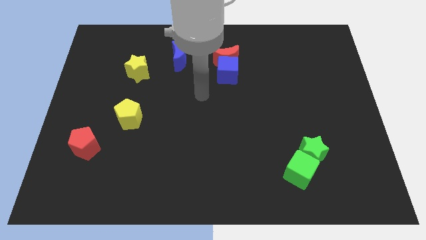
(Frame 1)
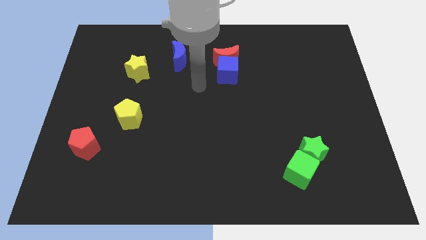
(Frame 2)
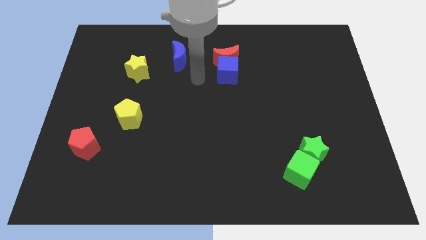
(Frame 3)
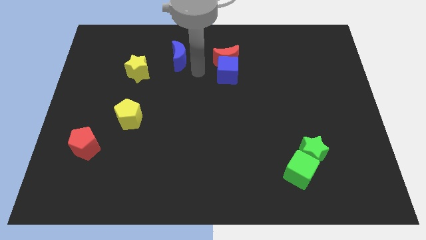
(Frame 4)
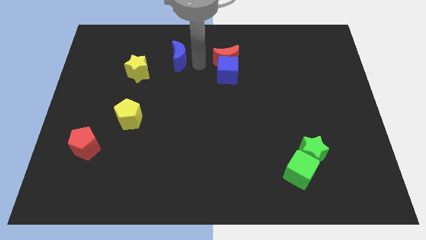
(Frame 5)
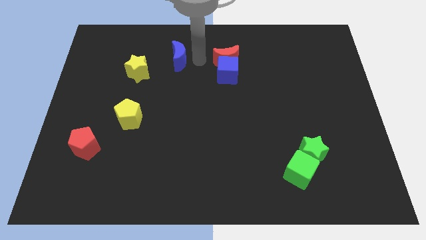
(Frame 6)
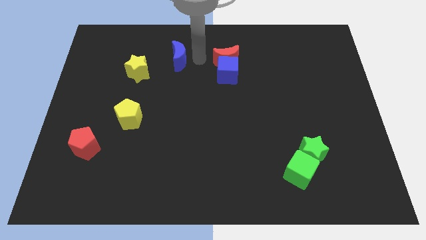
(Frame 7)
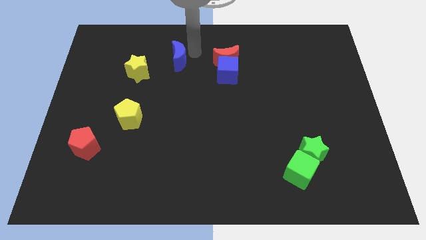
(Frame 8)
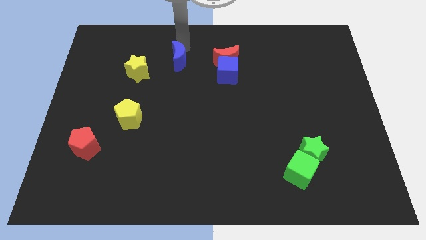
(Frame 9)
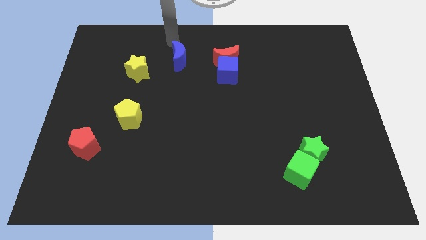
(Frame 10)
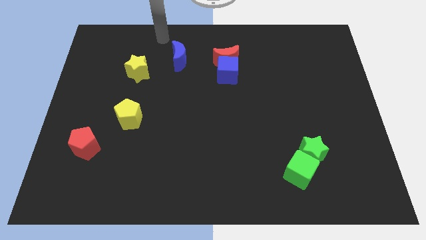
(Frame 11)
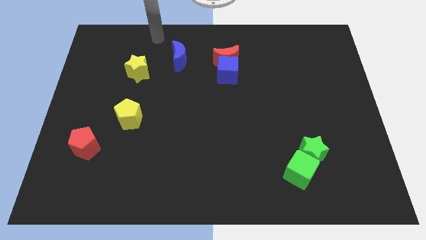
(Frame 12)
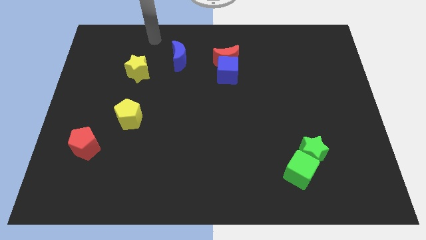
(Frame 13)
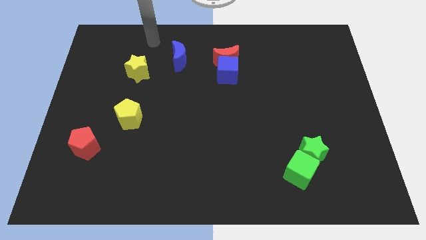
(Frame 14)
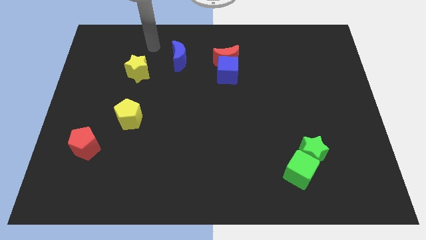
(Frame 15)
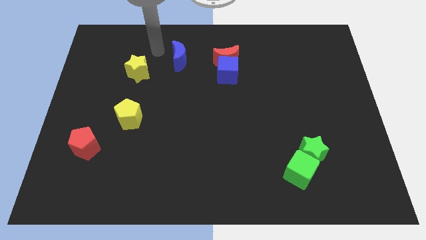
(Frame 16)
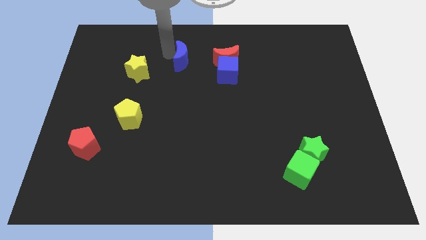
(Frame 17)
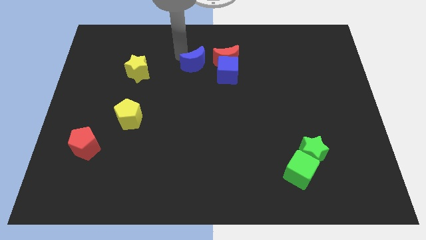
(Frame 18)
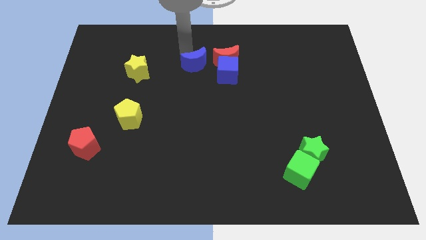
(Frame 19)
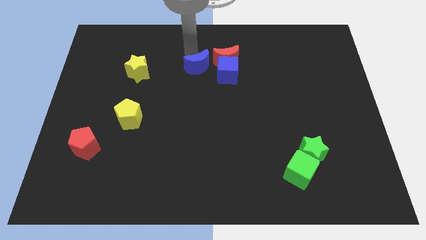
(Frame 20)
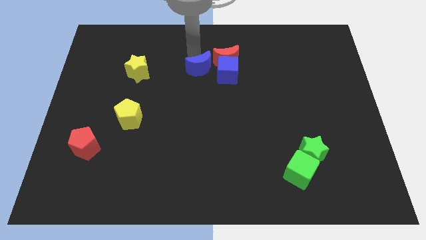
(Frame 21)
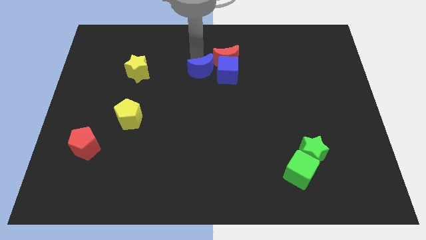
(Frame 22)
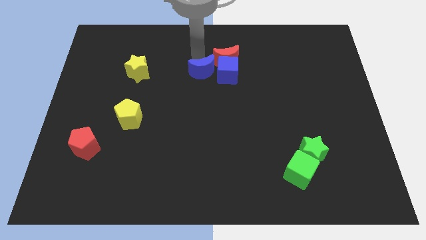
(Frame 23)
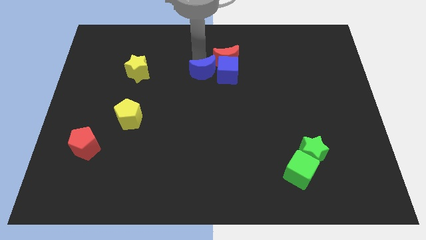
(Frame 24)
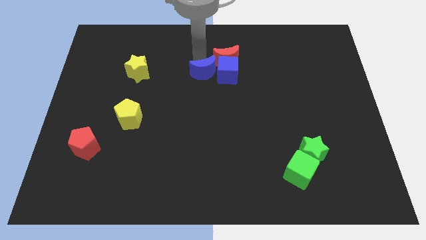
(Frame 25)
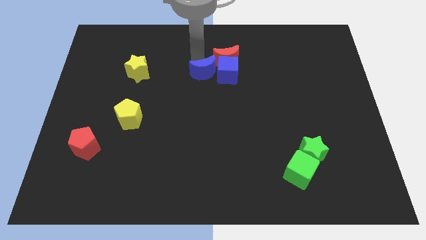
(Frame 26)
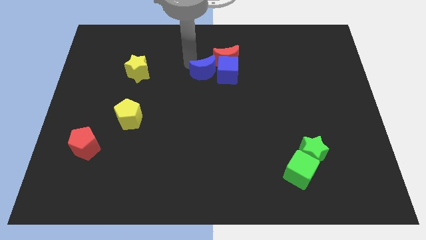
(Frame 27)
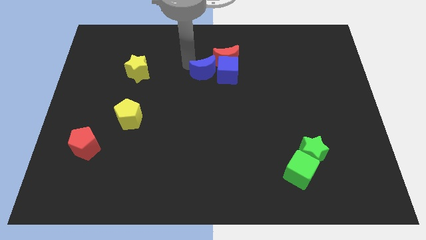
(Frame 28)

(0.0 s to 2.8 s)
move the blue crescent close to the blue cube

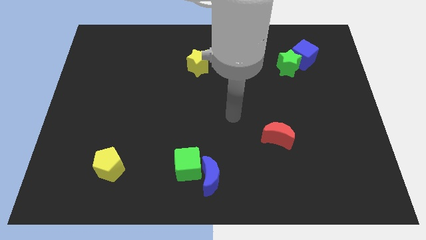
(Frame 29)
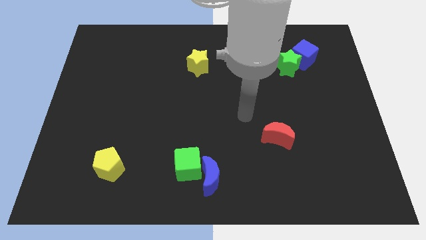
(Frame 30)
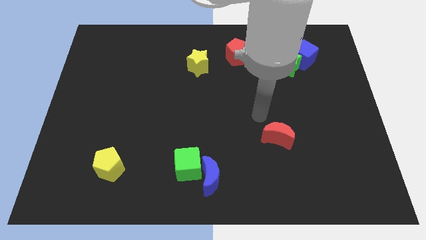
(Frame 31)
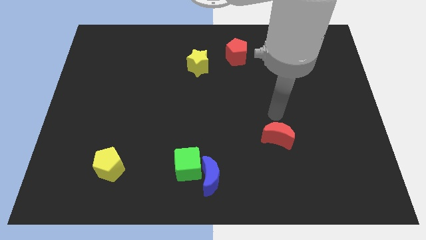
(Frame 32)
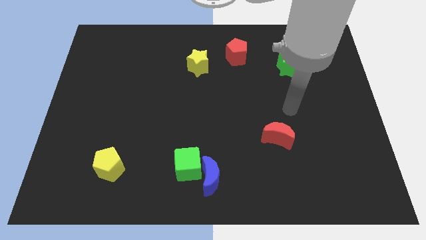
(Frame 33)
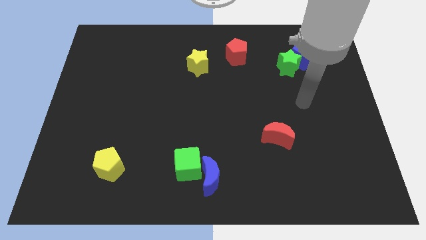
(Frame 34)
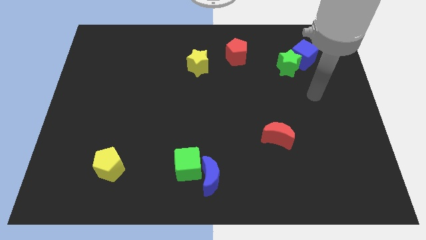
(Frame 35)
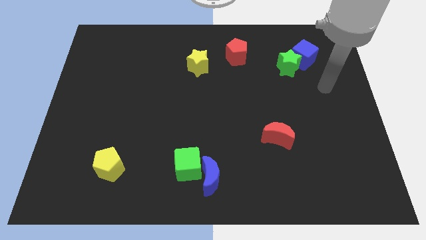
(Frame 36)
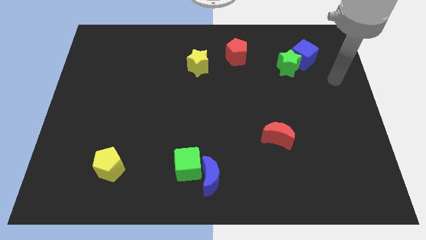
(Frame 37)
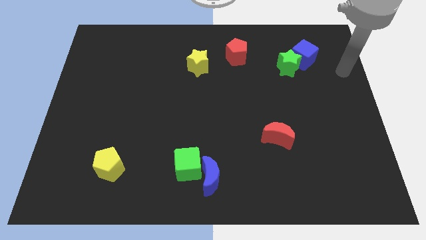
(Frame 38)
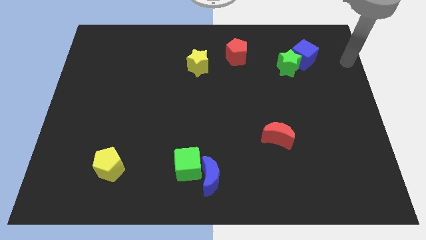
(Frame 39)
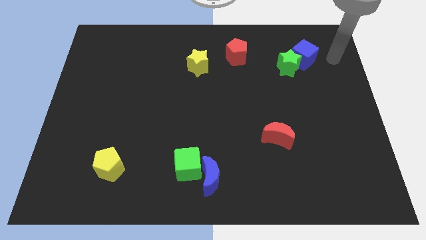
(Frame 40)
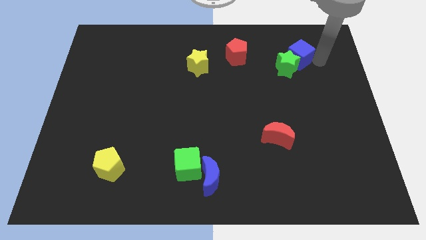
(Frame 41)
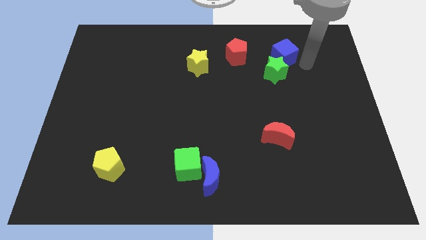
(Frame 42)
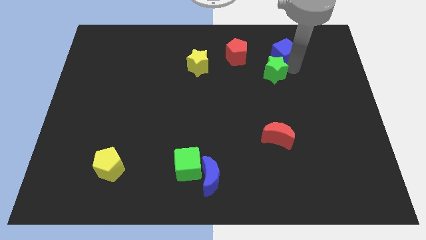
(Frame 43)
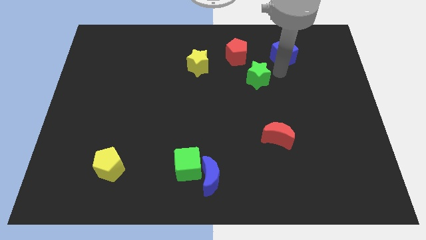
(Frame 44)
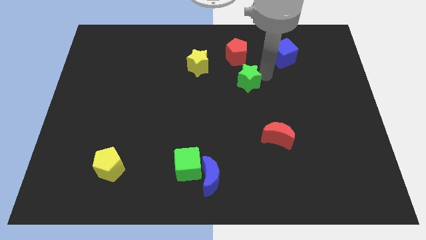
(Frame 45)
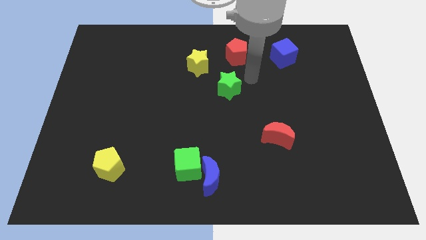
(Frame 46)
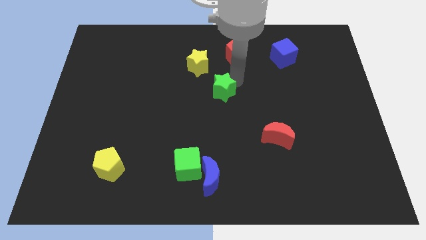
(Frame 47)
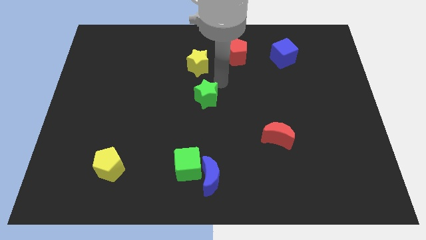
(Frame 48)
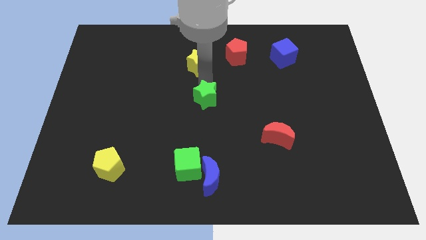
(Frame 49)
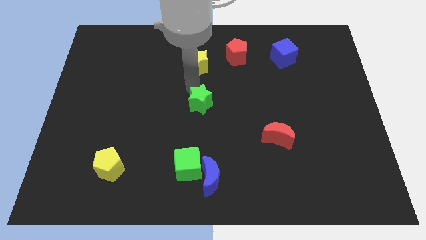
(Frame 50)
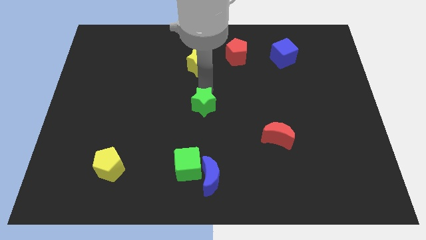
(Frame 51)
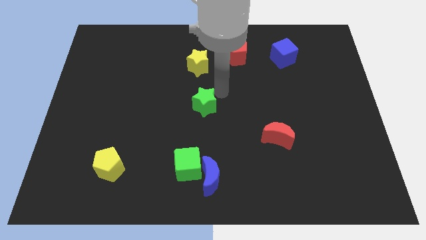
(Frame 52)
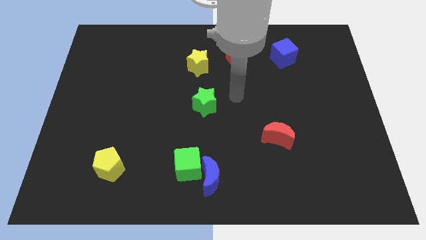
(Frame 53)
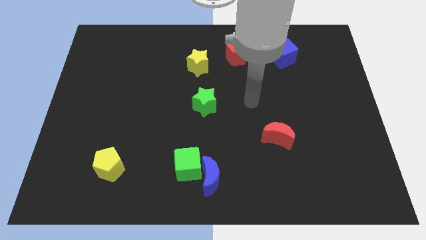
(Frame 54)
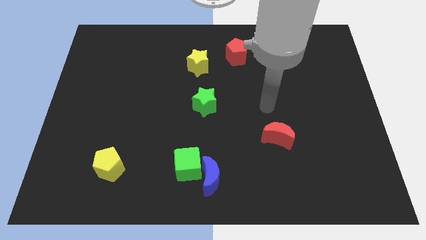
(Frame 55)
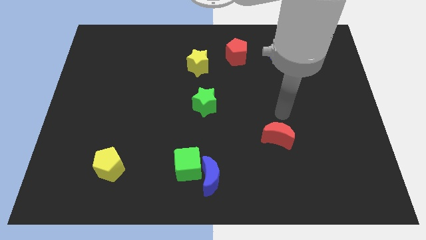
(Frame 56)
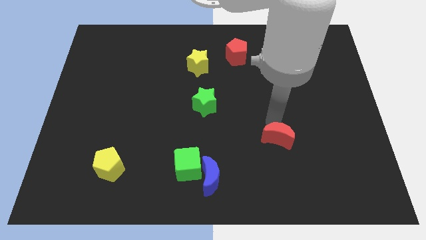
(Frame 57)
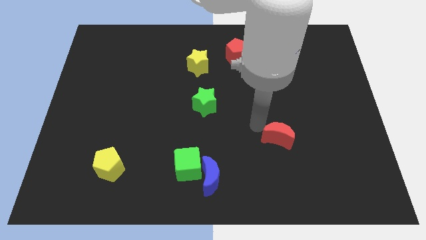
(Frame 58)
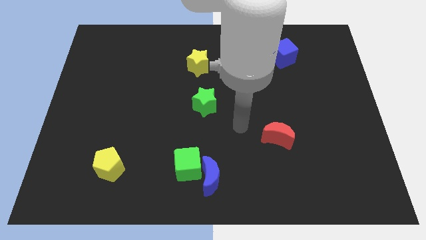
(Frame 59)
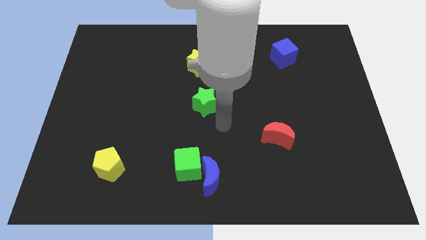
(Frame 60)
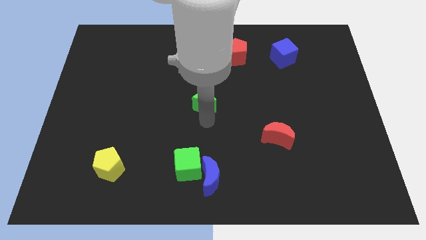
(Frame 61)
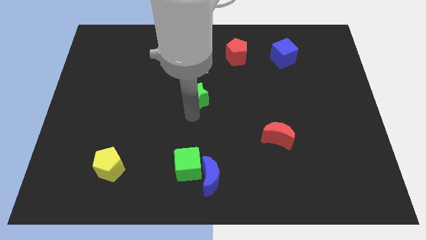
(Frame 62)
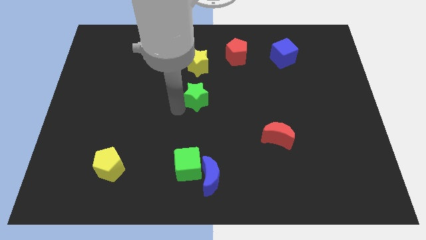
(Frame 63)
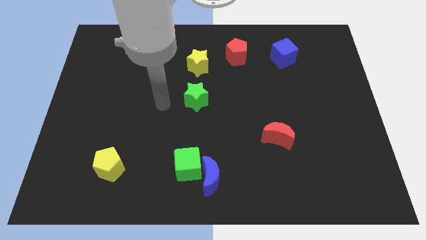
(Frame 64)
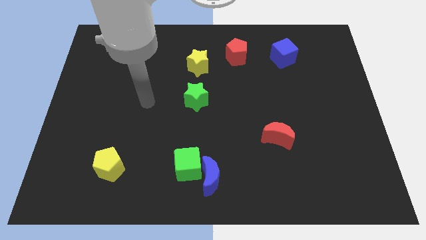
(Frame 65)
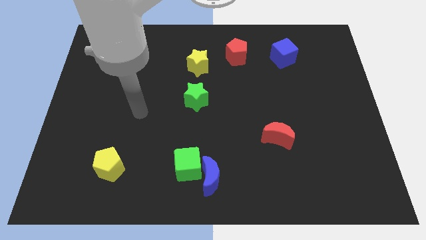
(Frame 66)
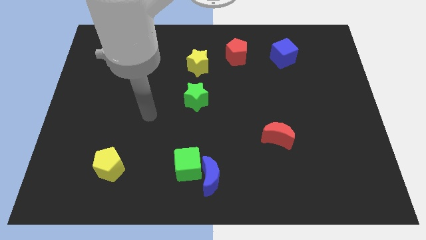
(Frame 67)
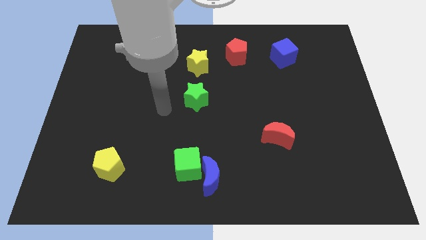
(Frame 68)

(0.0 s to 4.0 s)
move the green star to the center of the board

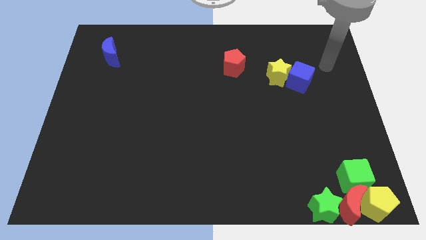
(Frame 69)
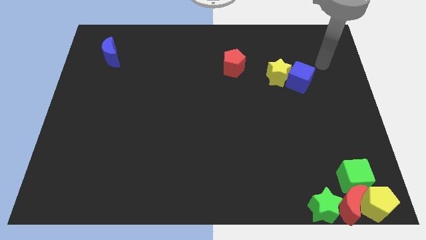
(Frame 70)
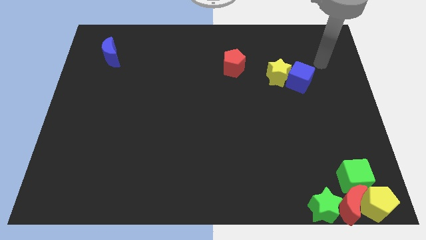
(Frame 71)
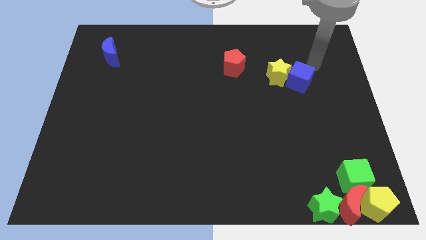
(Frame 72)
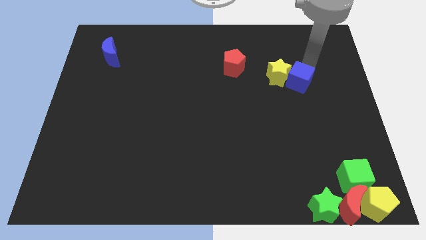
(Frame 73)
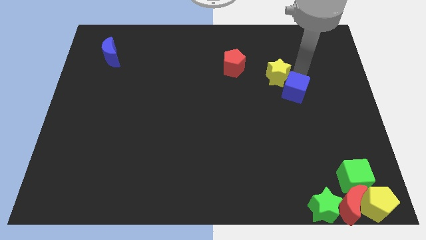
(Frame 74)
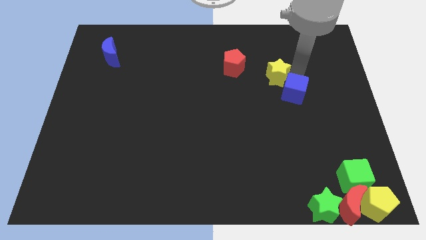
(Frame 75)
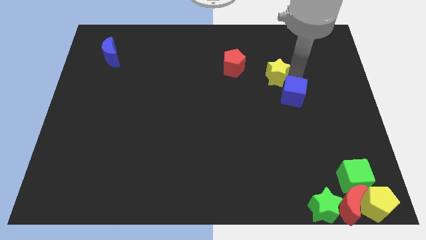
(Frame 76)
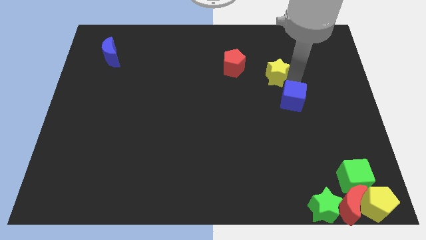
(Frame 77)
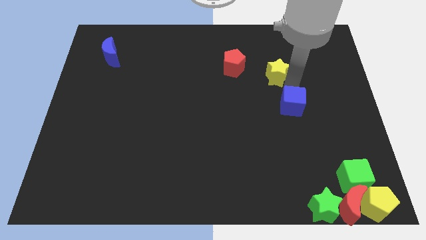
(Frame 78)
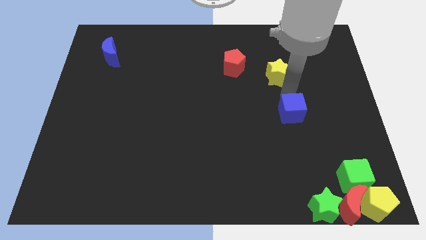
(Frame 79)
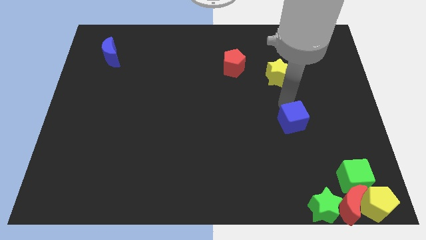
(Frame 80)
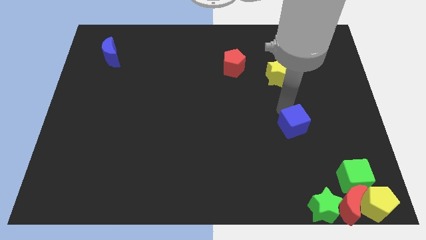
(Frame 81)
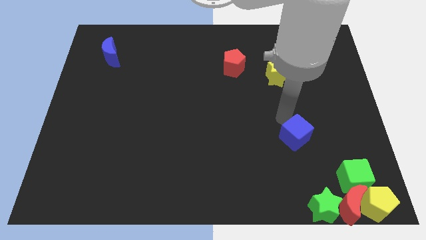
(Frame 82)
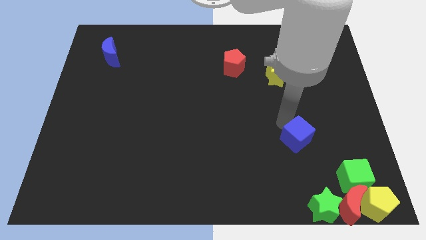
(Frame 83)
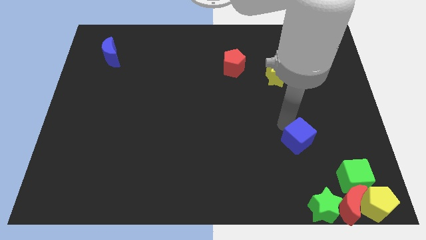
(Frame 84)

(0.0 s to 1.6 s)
move the blue cube towards bottom

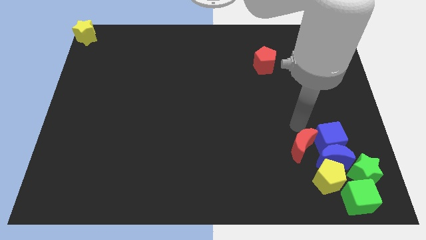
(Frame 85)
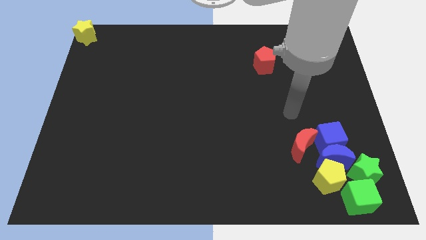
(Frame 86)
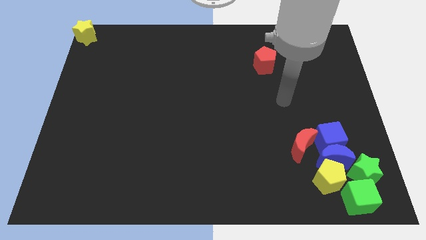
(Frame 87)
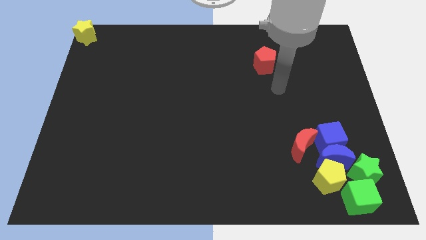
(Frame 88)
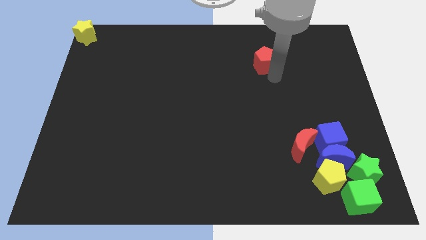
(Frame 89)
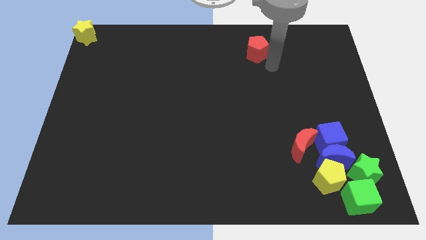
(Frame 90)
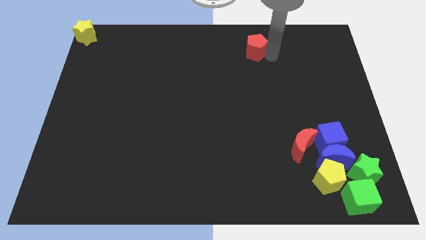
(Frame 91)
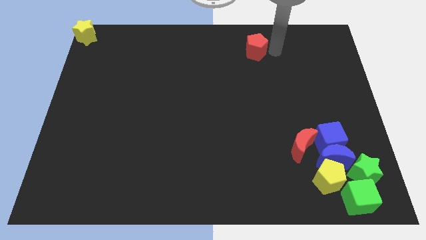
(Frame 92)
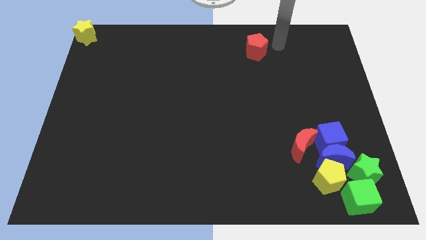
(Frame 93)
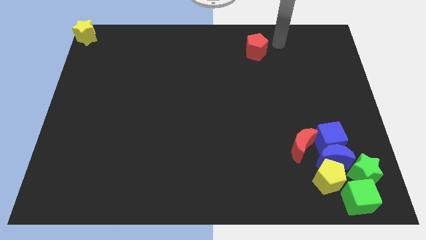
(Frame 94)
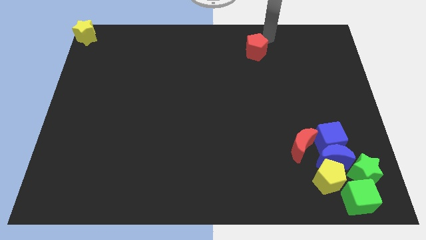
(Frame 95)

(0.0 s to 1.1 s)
push the red pentagon slightly towards the top
